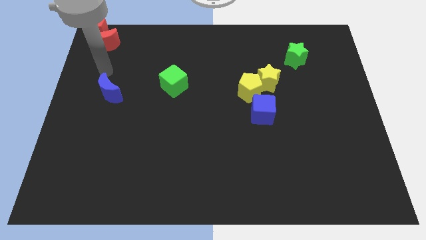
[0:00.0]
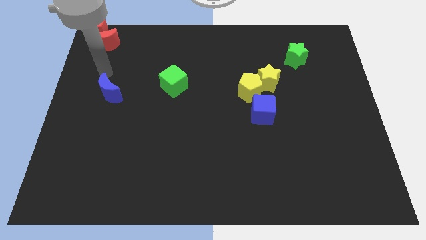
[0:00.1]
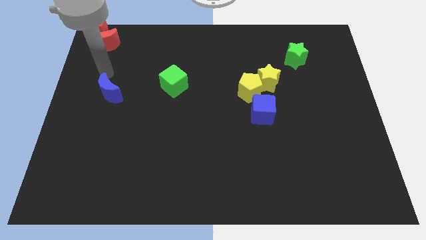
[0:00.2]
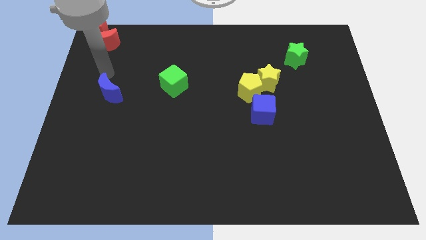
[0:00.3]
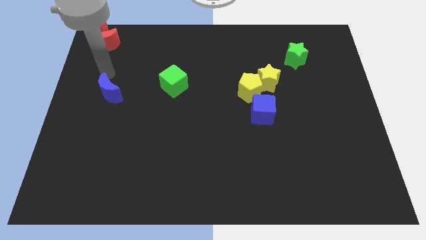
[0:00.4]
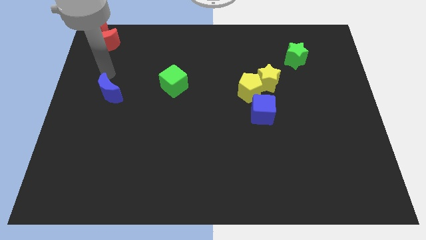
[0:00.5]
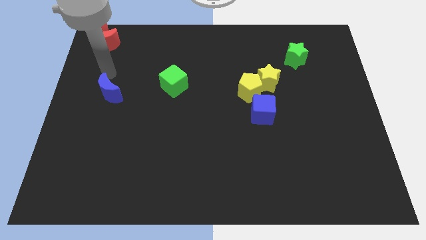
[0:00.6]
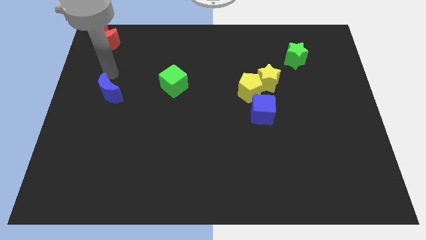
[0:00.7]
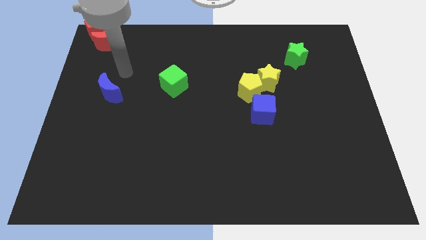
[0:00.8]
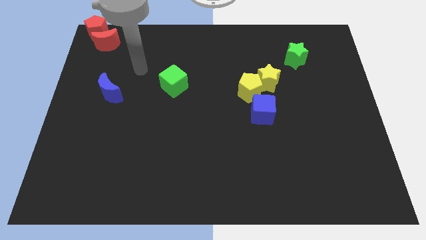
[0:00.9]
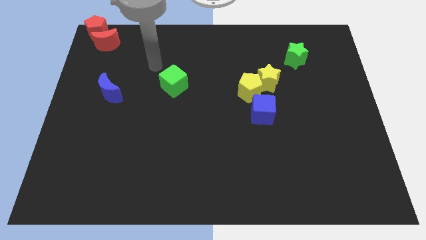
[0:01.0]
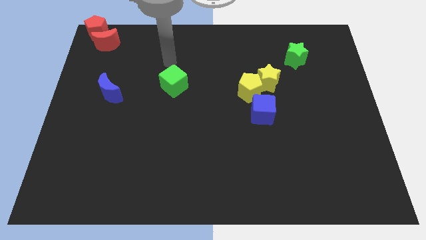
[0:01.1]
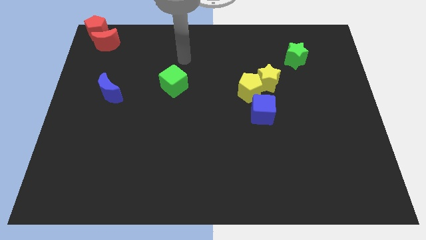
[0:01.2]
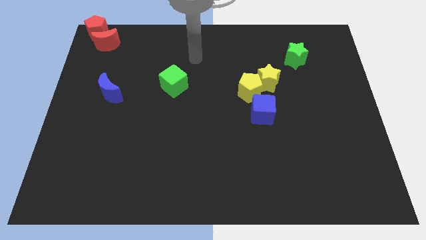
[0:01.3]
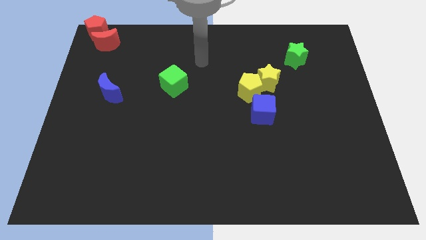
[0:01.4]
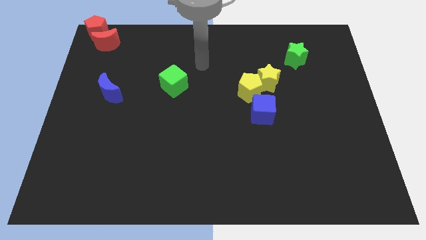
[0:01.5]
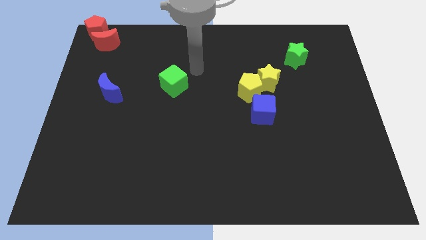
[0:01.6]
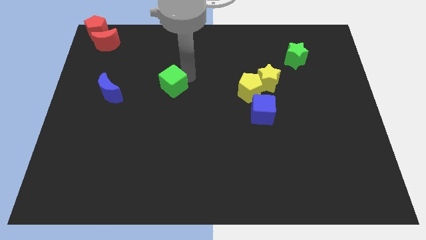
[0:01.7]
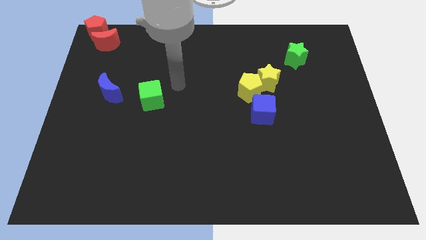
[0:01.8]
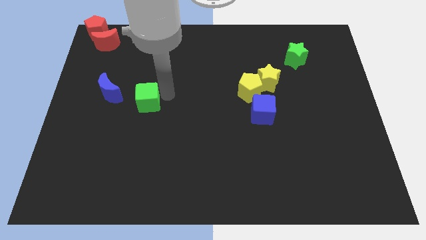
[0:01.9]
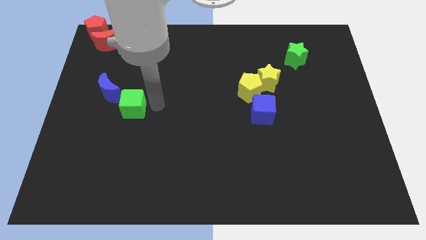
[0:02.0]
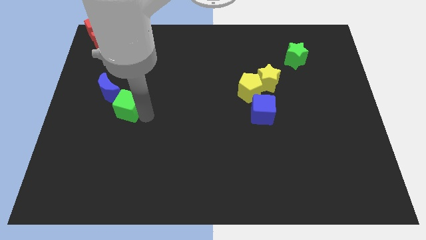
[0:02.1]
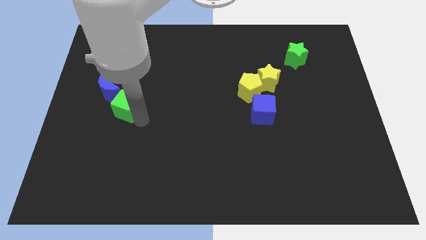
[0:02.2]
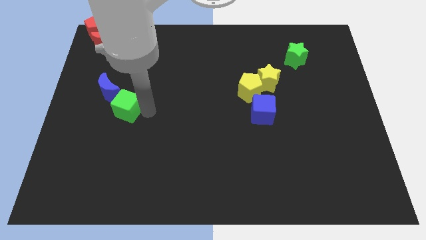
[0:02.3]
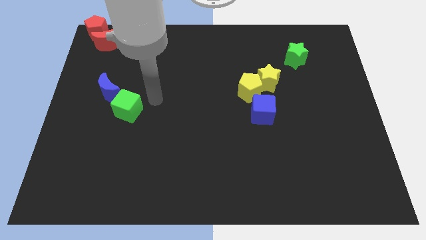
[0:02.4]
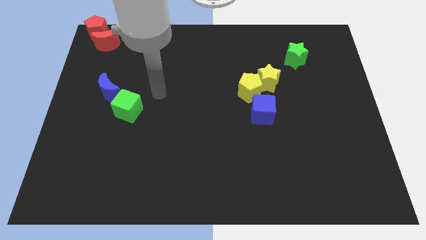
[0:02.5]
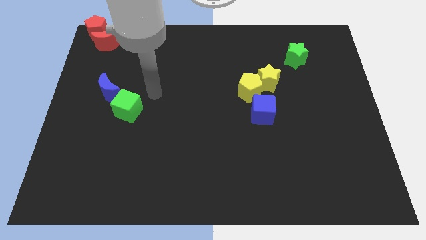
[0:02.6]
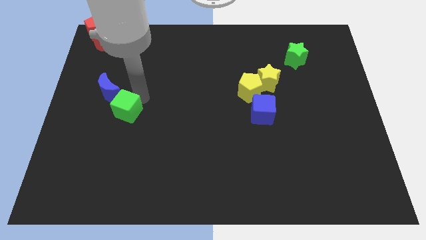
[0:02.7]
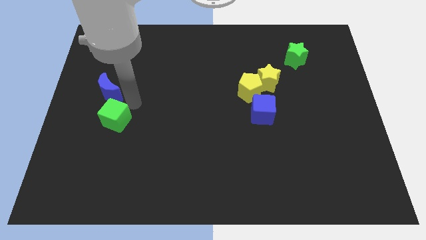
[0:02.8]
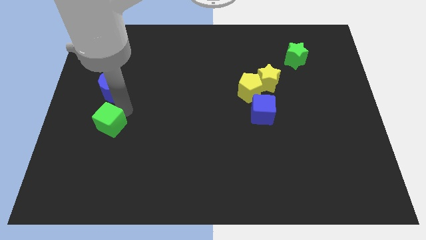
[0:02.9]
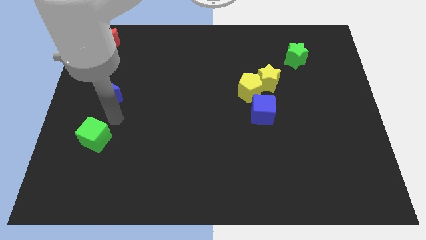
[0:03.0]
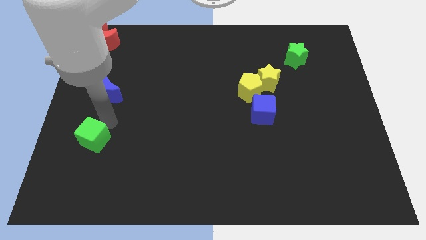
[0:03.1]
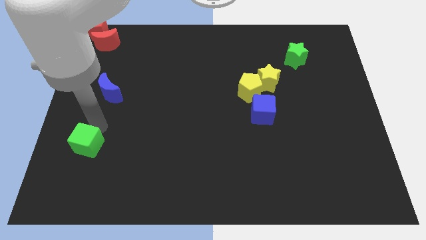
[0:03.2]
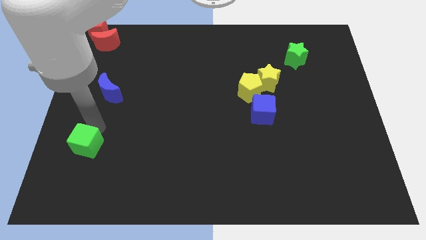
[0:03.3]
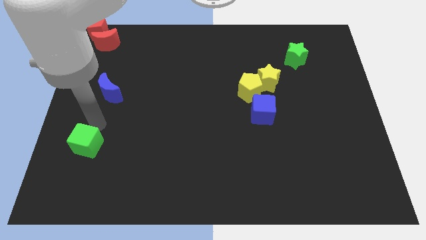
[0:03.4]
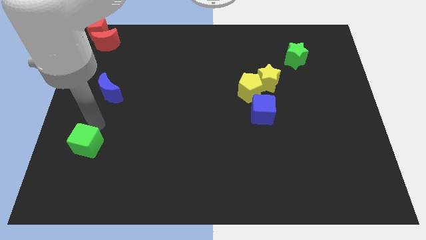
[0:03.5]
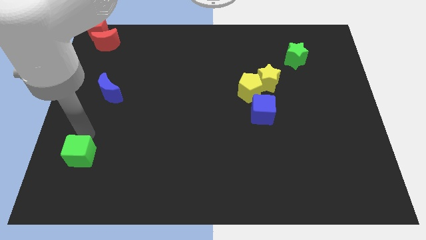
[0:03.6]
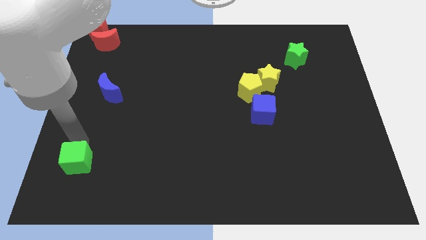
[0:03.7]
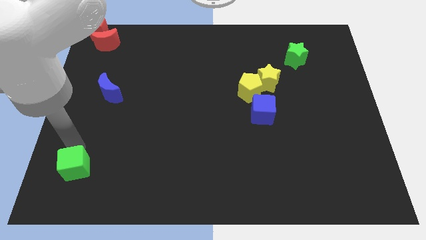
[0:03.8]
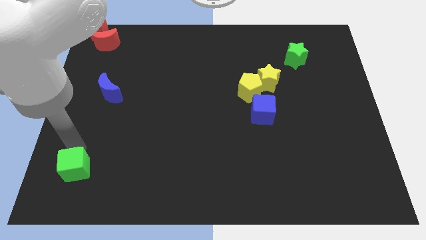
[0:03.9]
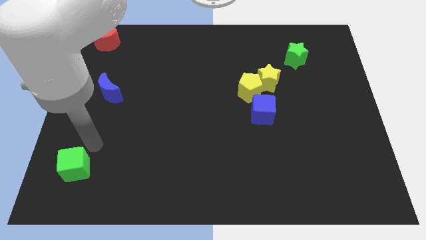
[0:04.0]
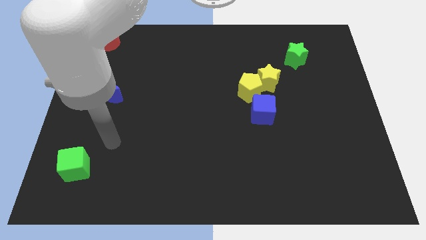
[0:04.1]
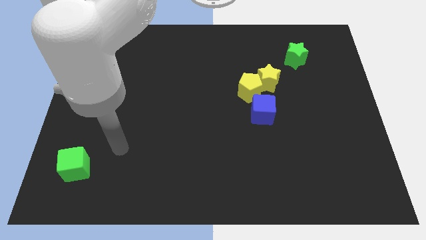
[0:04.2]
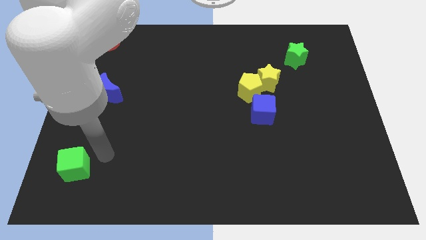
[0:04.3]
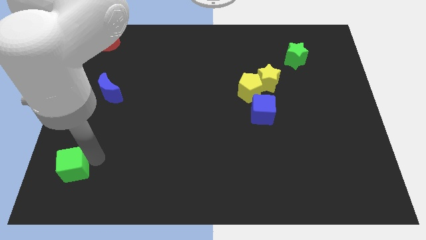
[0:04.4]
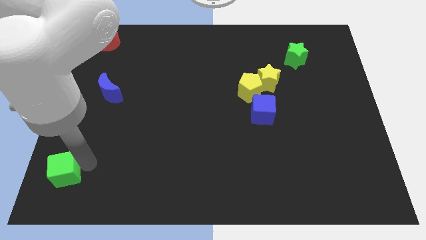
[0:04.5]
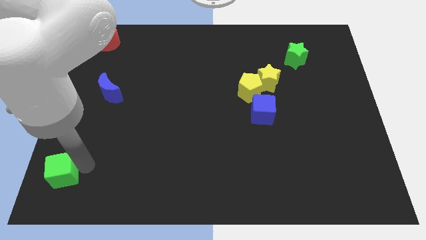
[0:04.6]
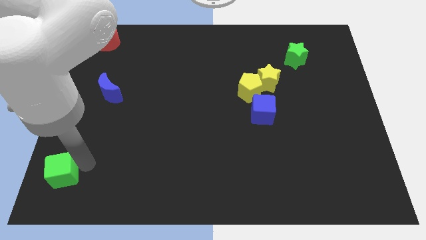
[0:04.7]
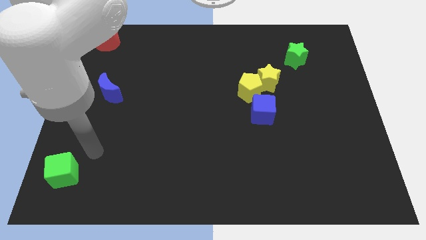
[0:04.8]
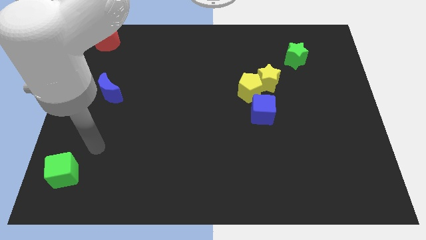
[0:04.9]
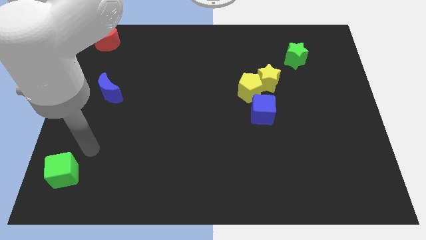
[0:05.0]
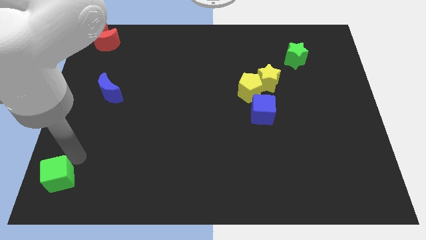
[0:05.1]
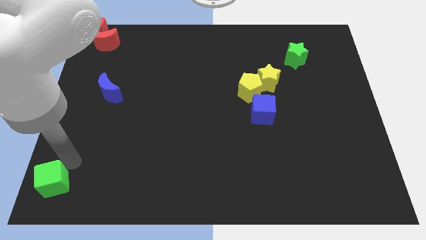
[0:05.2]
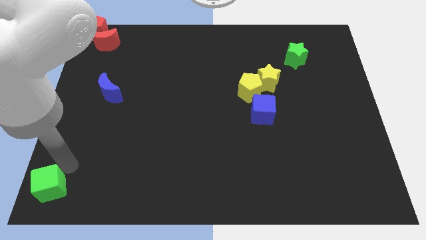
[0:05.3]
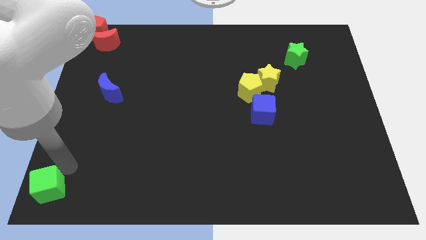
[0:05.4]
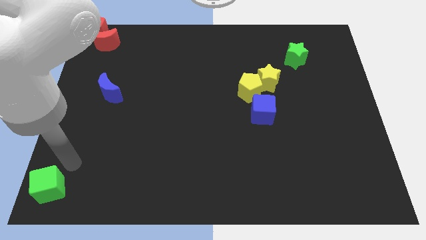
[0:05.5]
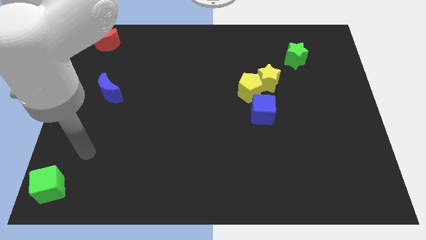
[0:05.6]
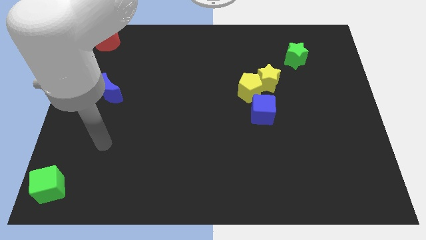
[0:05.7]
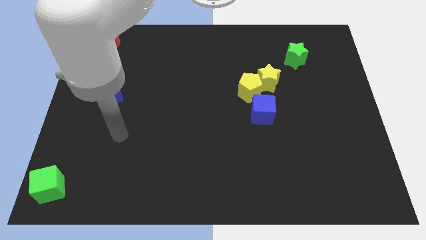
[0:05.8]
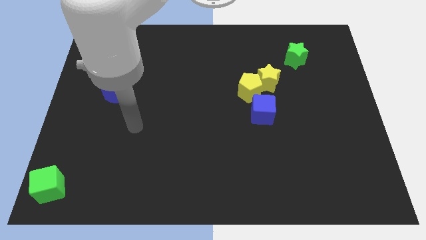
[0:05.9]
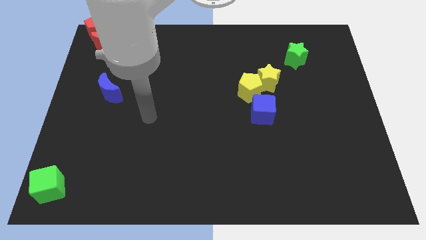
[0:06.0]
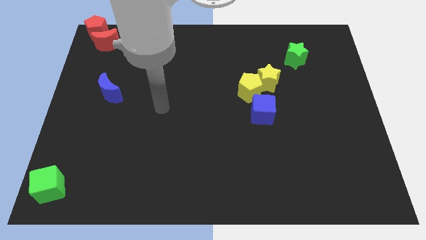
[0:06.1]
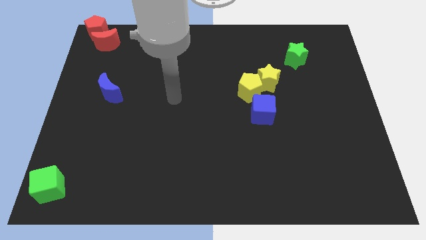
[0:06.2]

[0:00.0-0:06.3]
move the green cube to the bottom left corner of the board

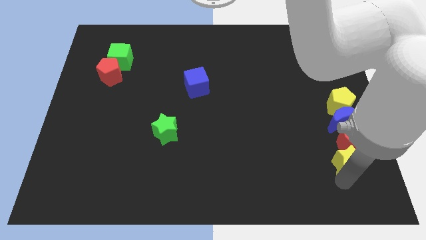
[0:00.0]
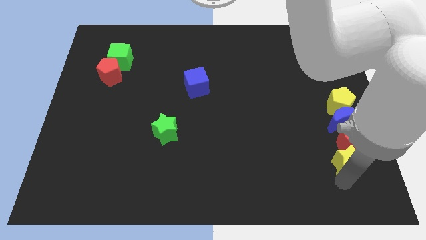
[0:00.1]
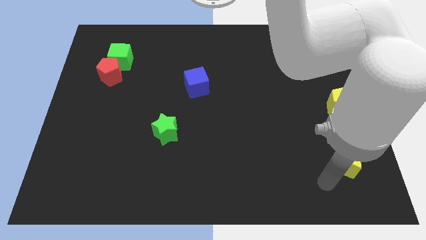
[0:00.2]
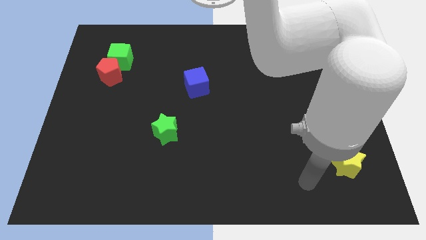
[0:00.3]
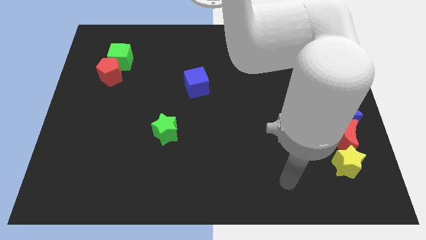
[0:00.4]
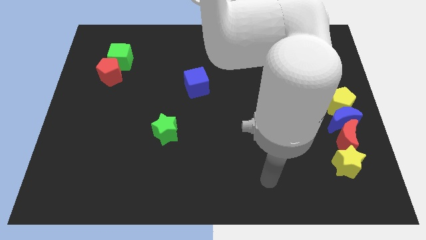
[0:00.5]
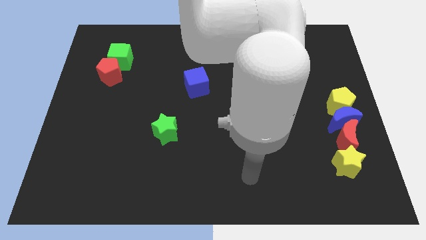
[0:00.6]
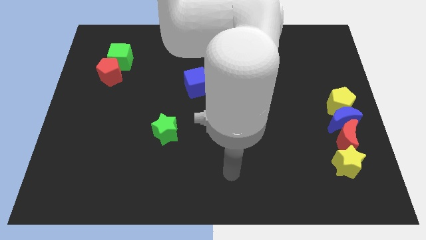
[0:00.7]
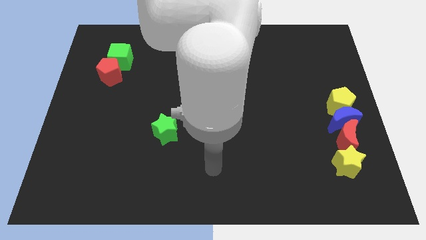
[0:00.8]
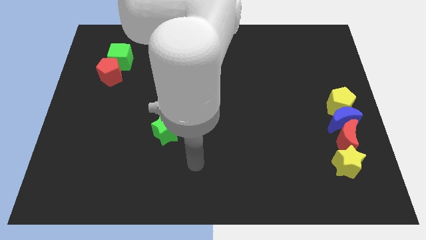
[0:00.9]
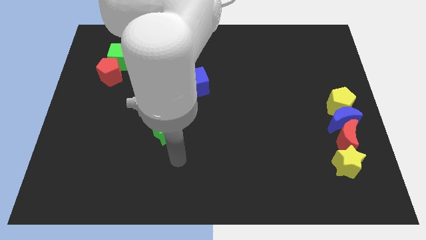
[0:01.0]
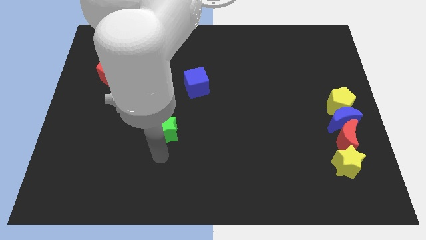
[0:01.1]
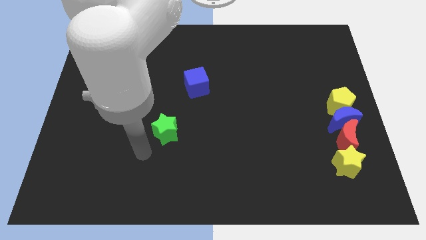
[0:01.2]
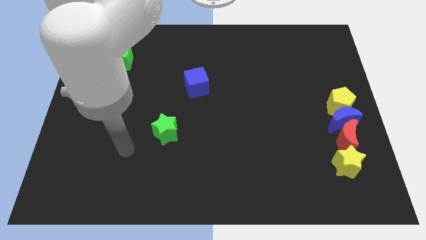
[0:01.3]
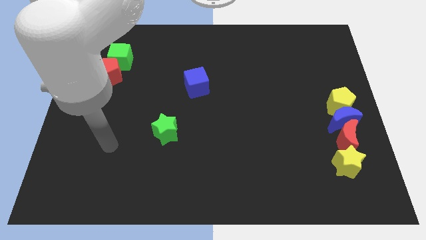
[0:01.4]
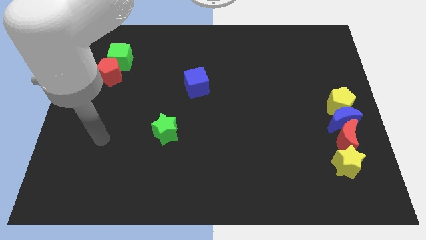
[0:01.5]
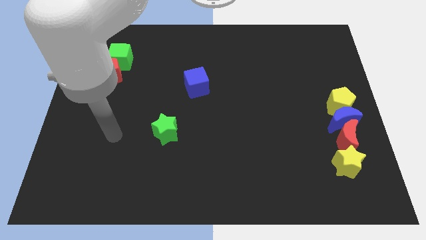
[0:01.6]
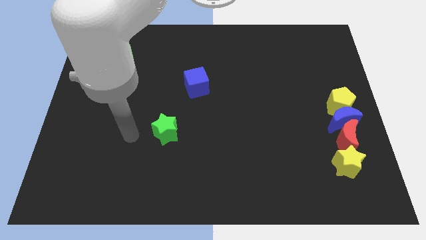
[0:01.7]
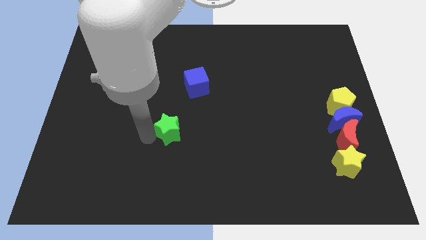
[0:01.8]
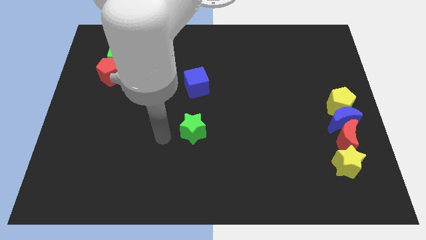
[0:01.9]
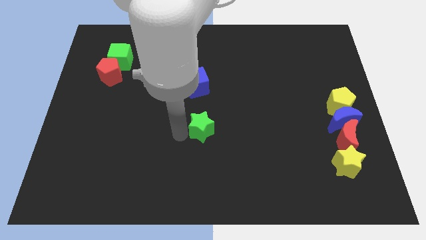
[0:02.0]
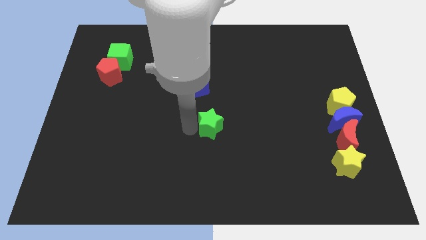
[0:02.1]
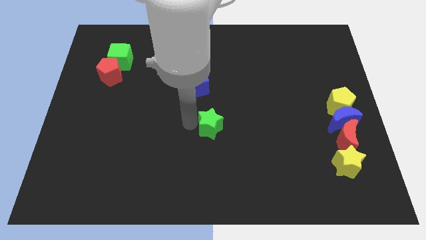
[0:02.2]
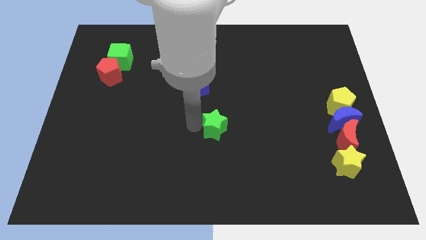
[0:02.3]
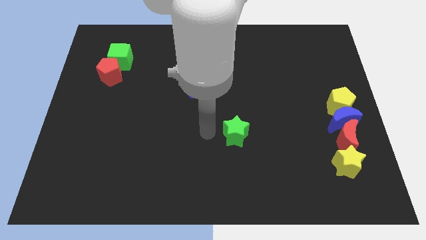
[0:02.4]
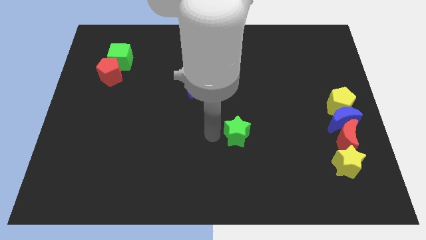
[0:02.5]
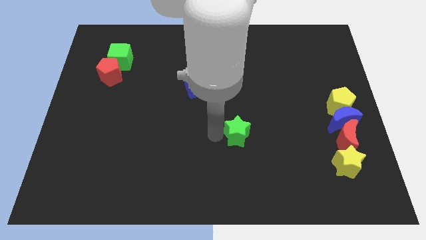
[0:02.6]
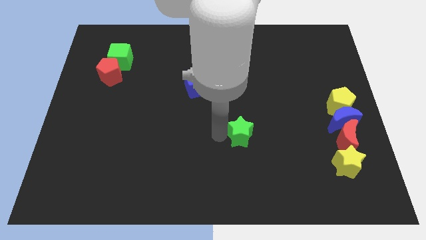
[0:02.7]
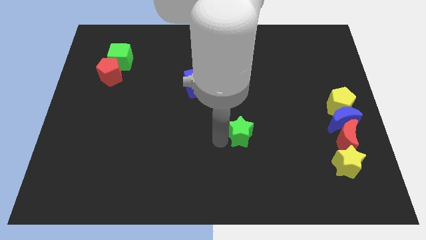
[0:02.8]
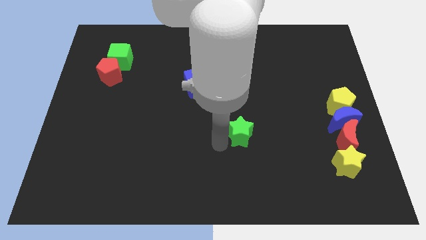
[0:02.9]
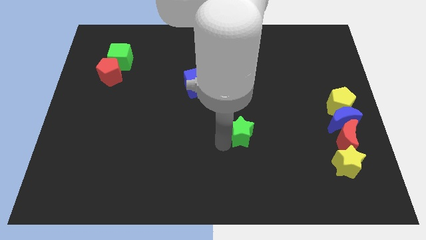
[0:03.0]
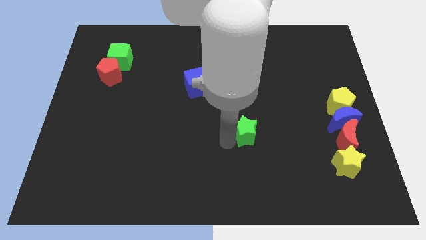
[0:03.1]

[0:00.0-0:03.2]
slide the green star slightly towards right
